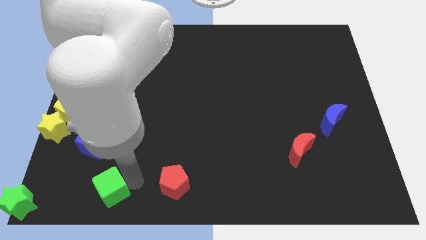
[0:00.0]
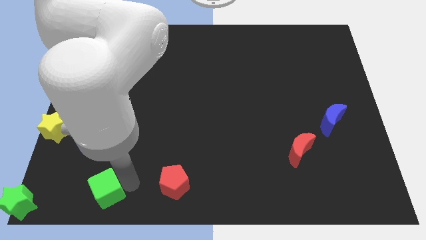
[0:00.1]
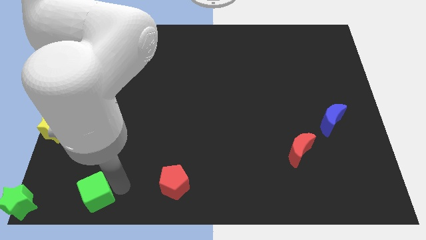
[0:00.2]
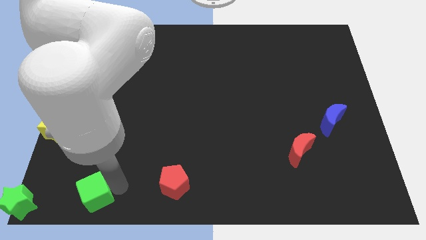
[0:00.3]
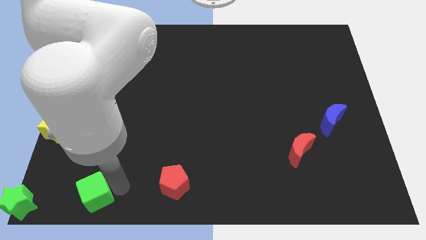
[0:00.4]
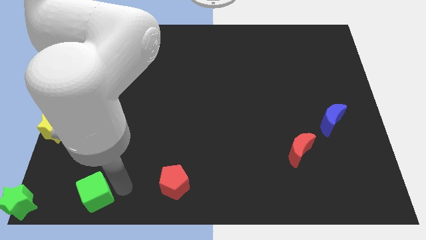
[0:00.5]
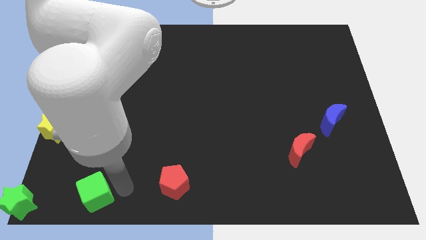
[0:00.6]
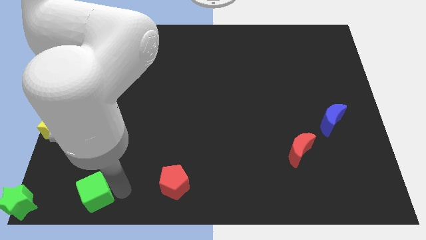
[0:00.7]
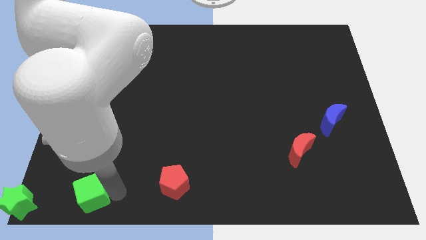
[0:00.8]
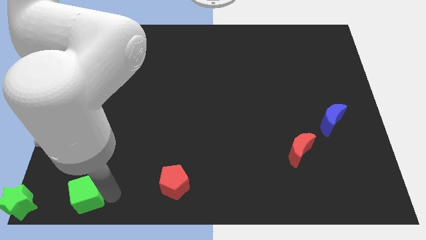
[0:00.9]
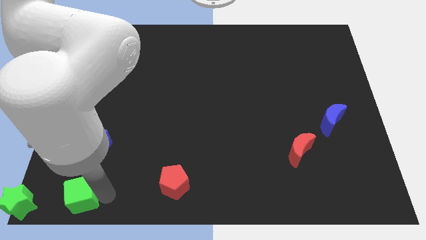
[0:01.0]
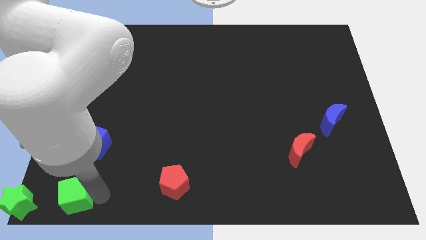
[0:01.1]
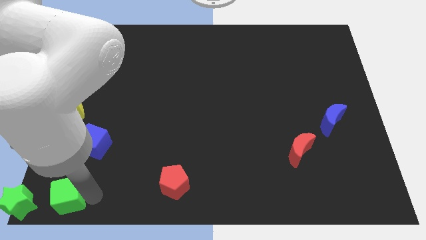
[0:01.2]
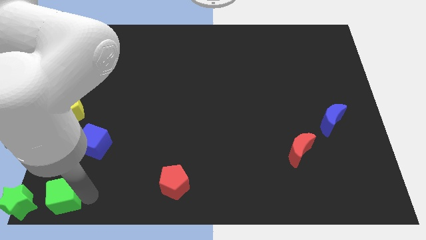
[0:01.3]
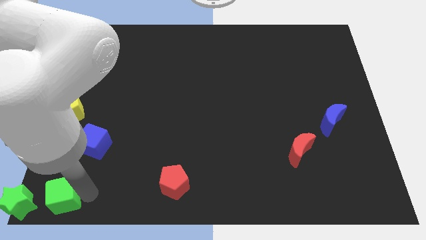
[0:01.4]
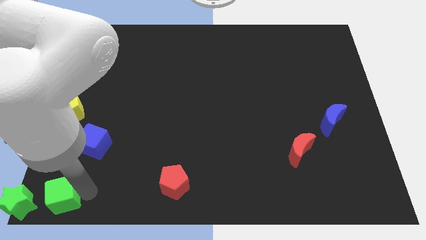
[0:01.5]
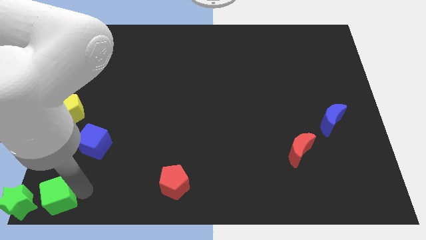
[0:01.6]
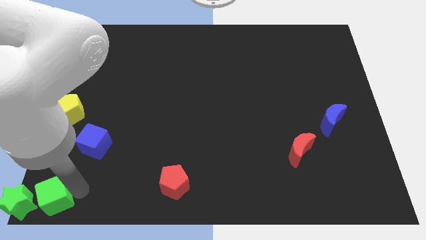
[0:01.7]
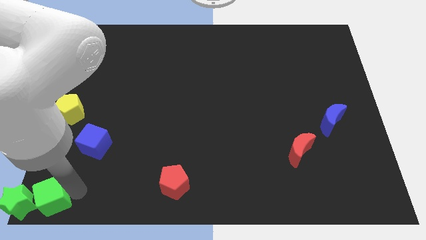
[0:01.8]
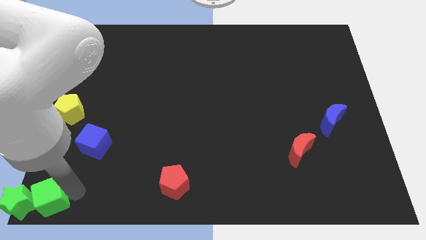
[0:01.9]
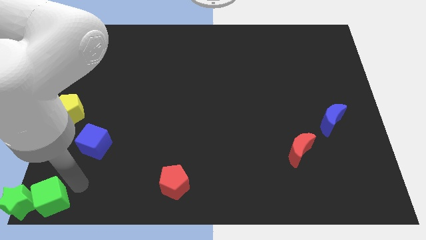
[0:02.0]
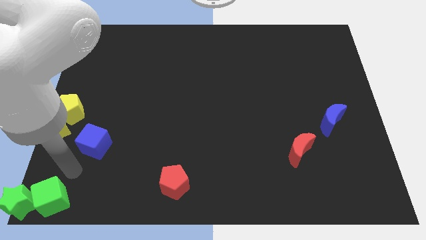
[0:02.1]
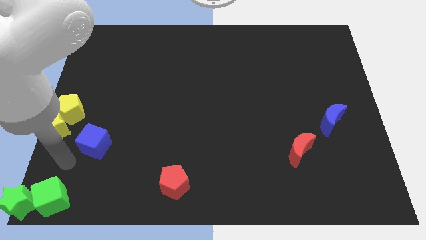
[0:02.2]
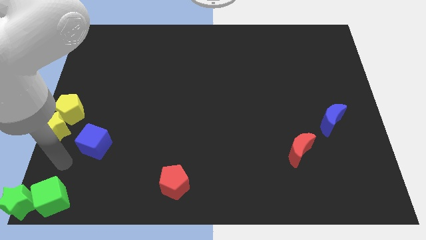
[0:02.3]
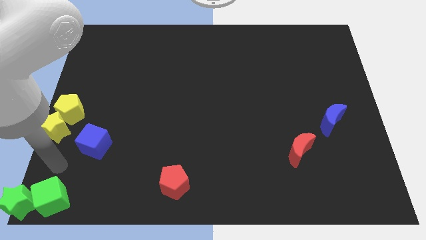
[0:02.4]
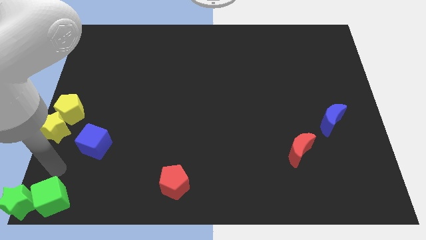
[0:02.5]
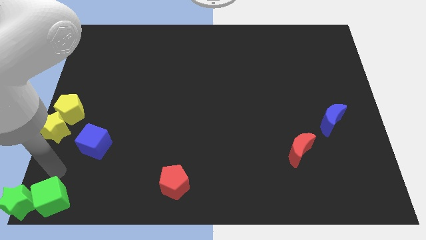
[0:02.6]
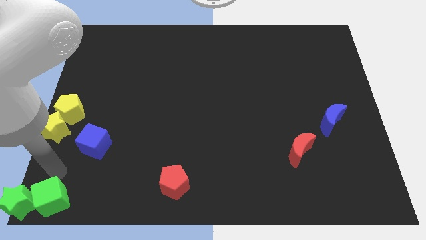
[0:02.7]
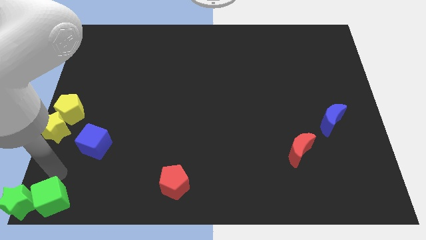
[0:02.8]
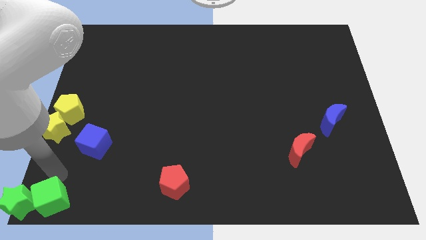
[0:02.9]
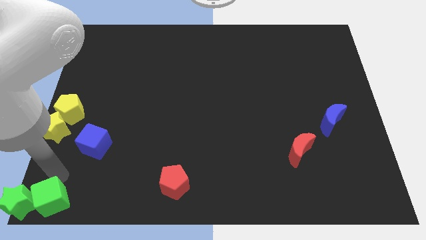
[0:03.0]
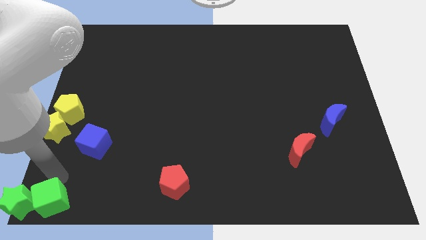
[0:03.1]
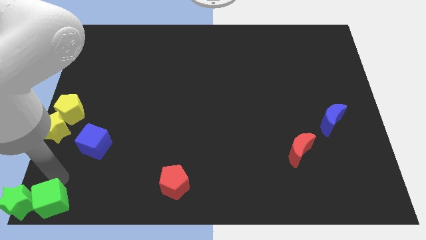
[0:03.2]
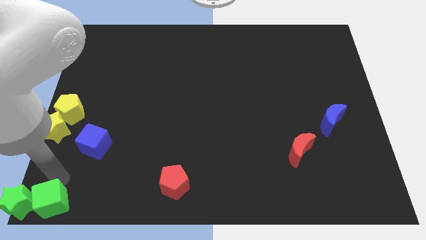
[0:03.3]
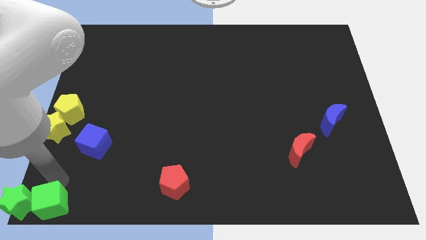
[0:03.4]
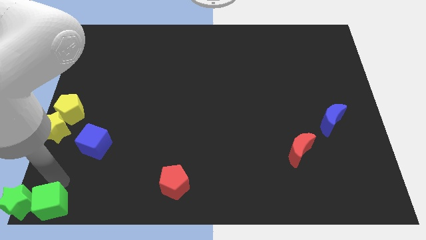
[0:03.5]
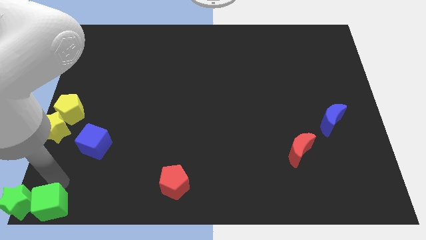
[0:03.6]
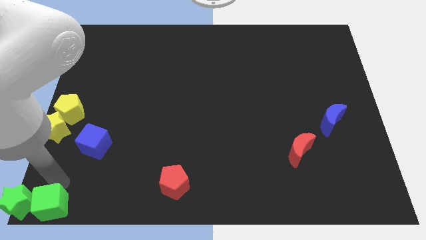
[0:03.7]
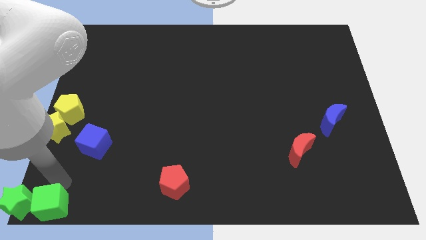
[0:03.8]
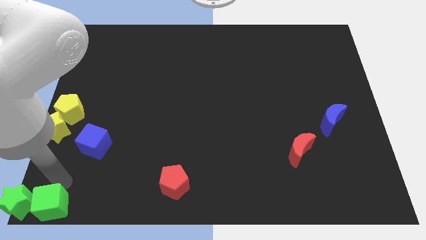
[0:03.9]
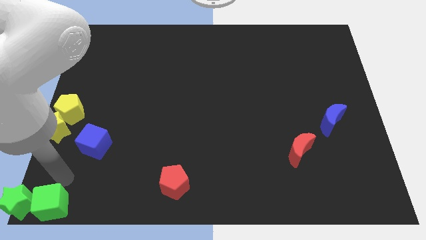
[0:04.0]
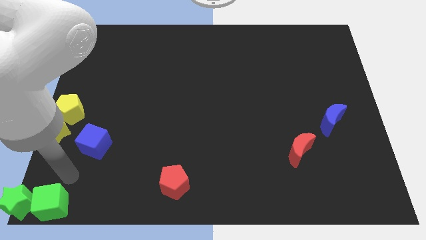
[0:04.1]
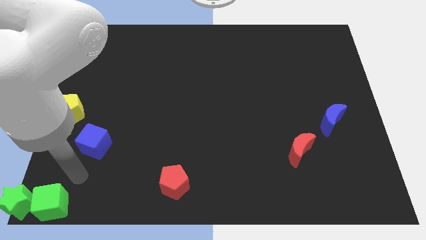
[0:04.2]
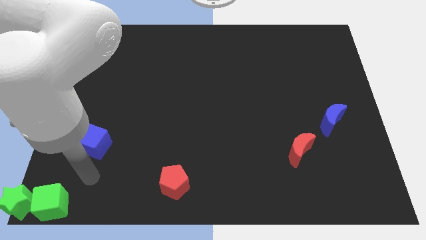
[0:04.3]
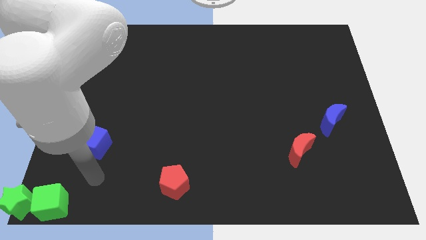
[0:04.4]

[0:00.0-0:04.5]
push the green cube into the green star

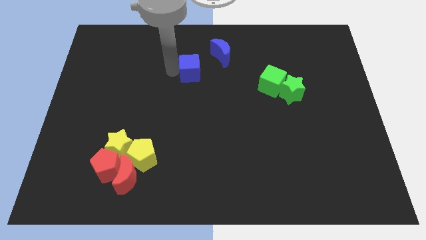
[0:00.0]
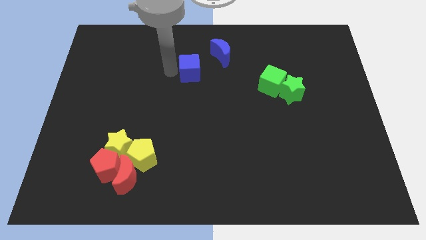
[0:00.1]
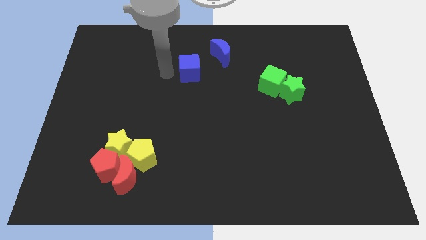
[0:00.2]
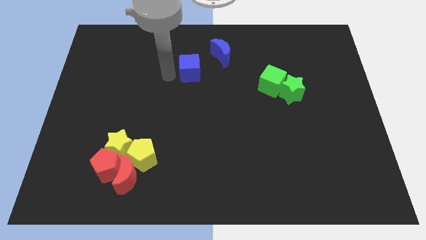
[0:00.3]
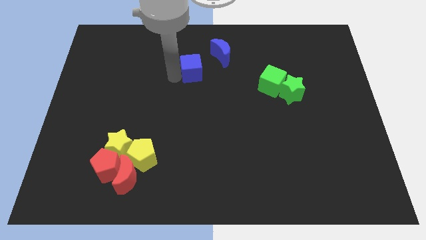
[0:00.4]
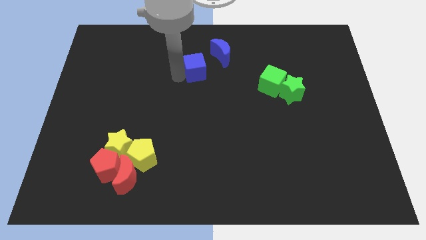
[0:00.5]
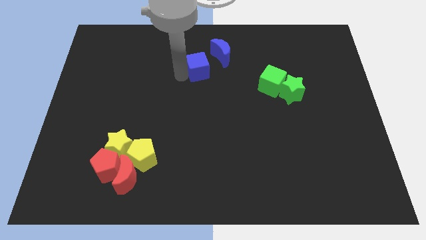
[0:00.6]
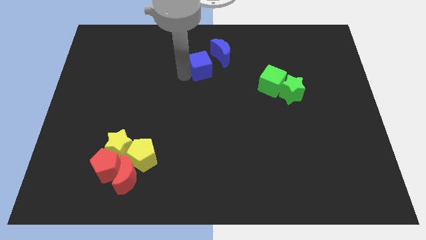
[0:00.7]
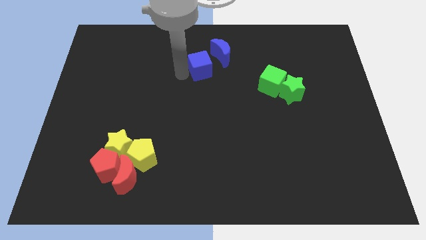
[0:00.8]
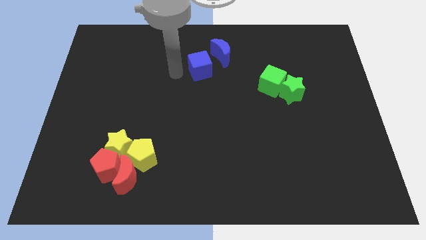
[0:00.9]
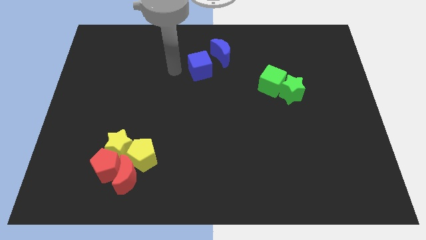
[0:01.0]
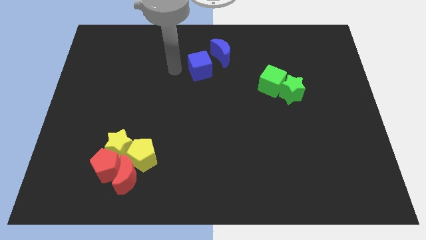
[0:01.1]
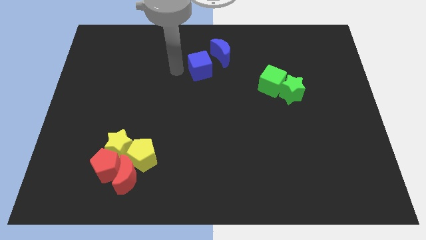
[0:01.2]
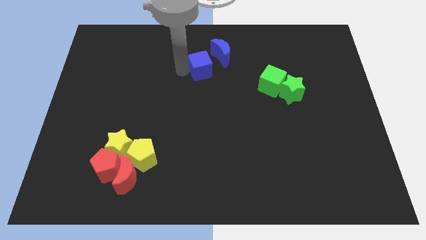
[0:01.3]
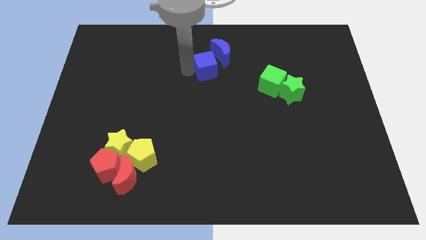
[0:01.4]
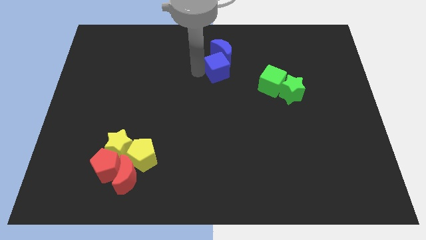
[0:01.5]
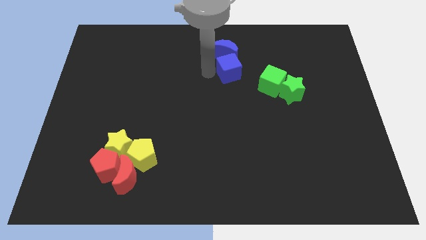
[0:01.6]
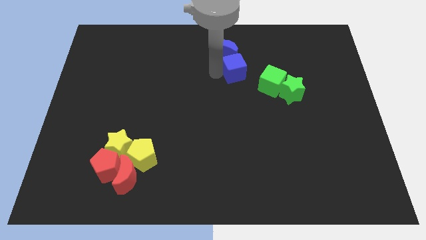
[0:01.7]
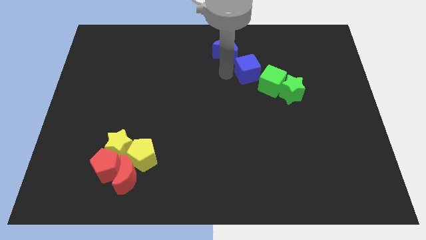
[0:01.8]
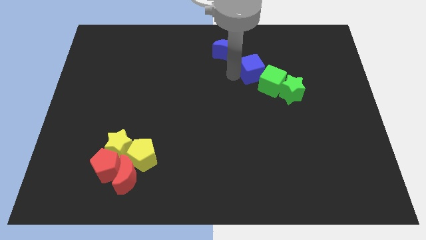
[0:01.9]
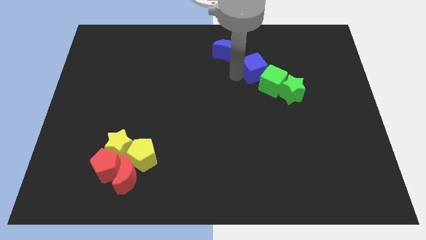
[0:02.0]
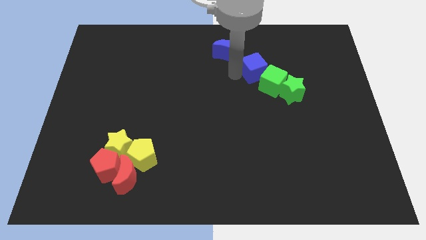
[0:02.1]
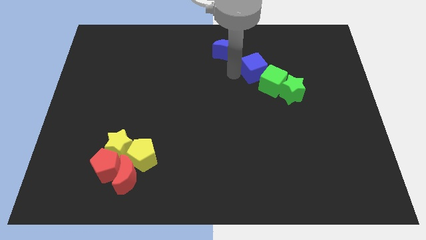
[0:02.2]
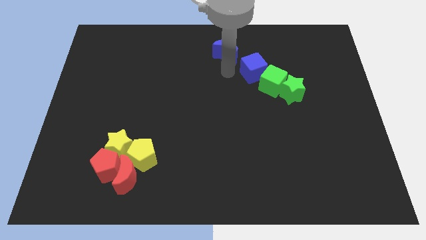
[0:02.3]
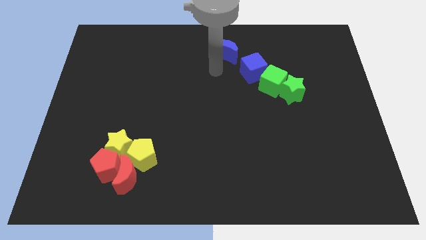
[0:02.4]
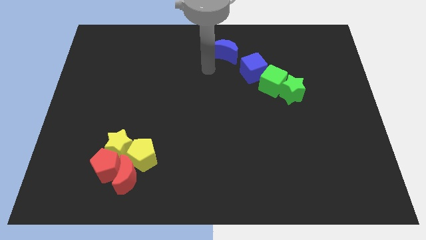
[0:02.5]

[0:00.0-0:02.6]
move the blue cube diagonally above the green cube

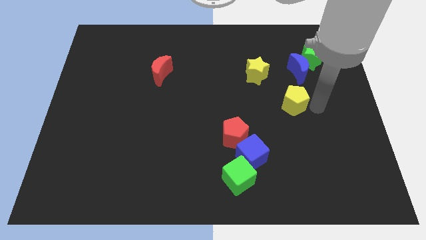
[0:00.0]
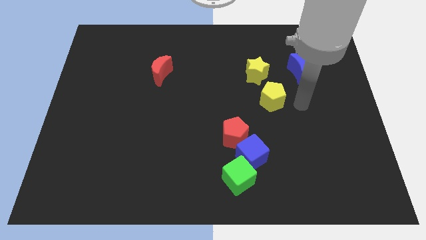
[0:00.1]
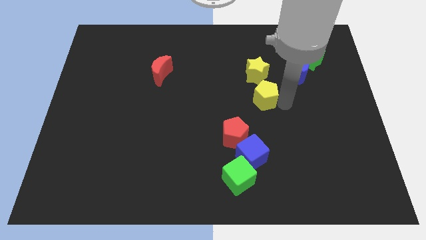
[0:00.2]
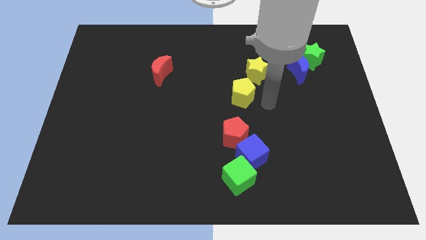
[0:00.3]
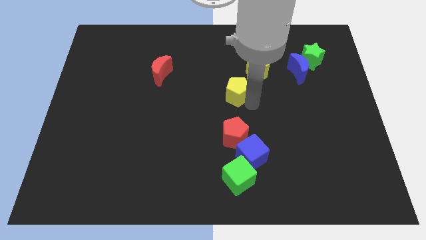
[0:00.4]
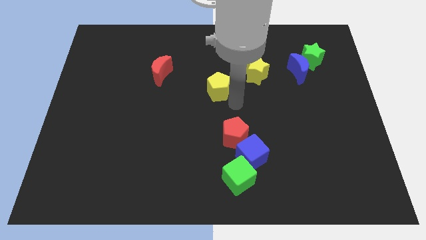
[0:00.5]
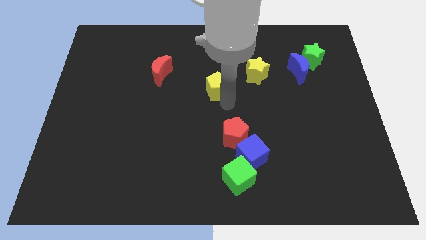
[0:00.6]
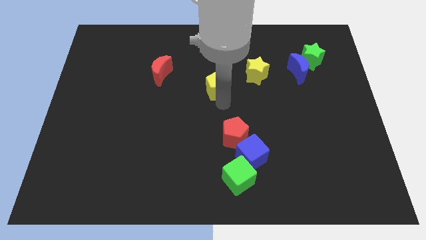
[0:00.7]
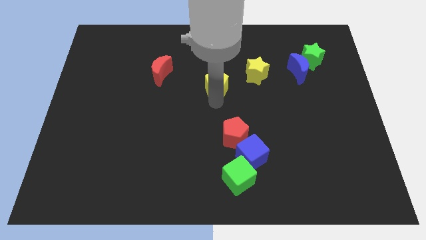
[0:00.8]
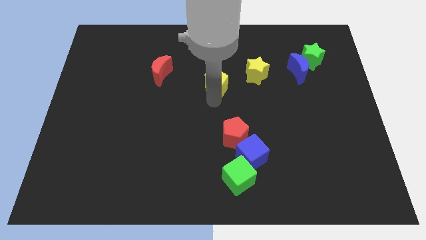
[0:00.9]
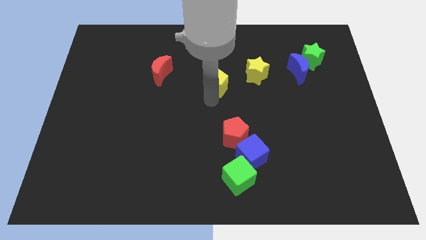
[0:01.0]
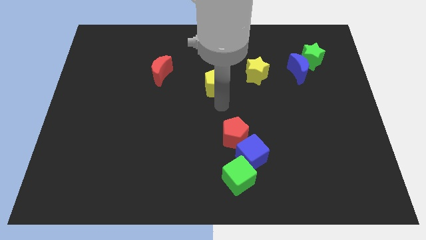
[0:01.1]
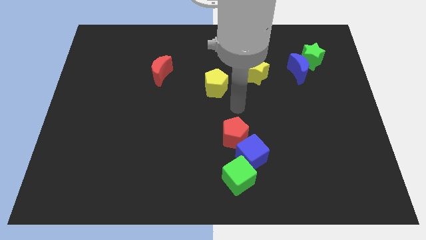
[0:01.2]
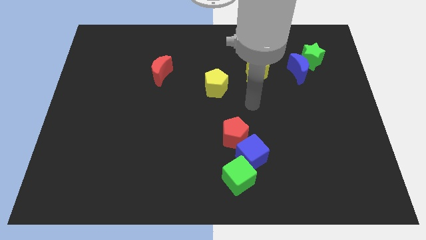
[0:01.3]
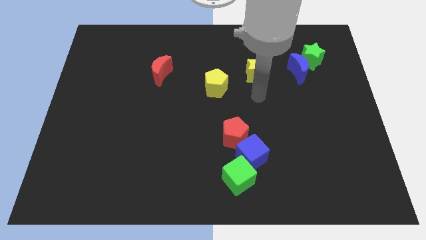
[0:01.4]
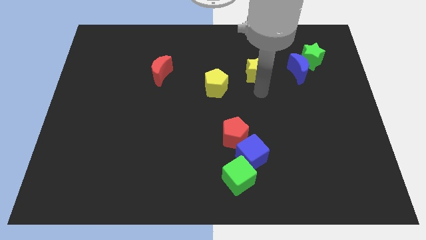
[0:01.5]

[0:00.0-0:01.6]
push the yellow pentagon towards the left side of the board
